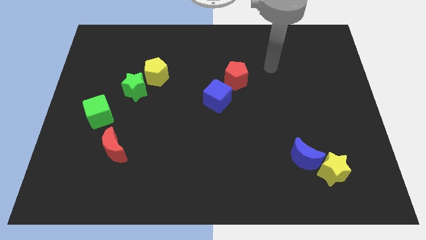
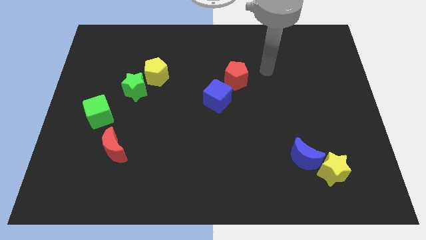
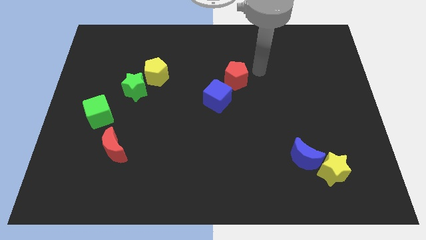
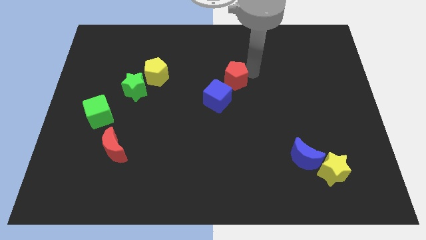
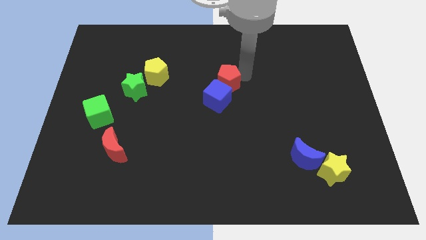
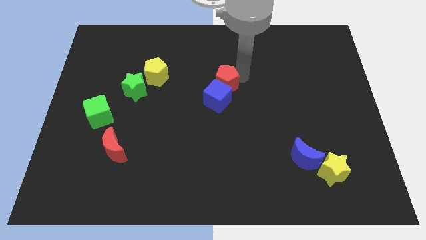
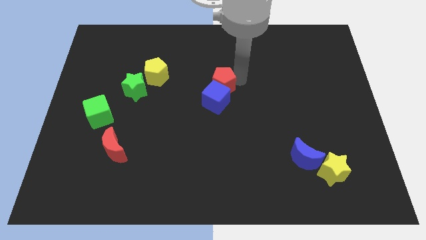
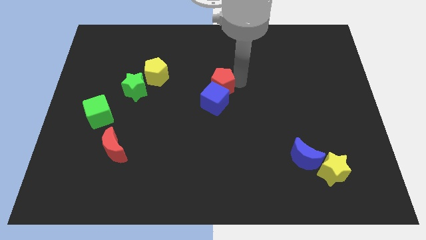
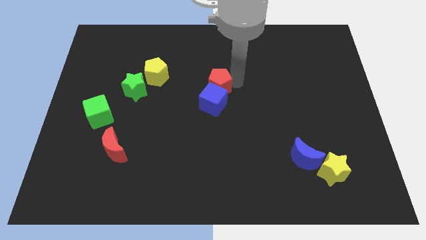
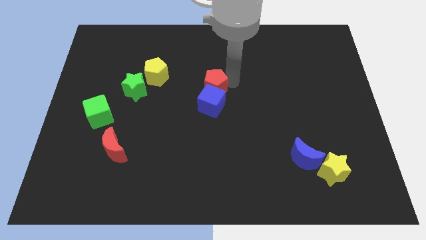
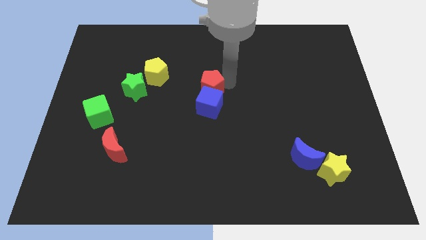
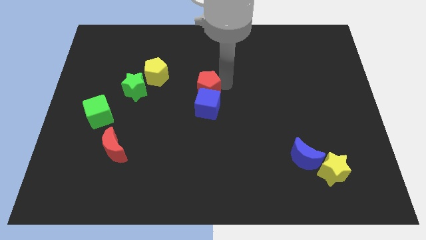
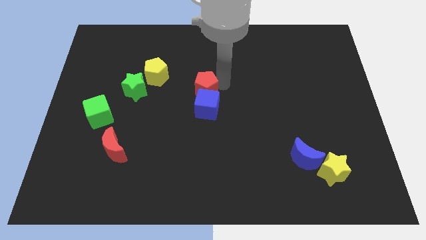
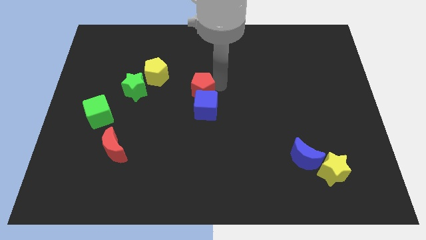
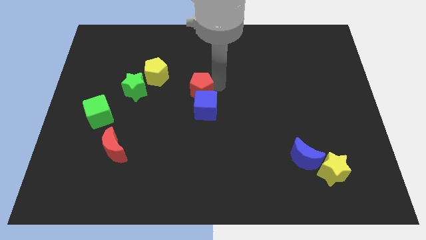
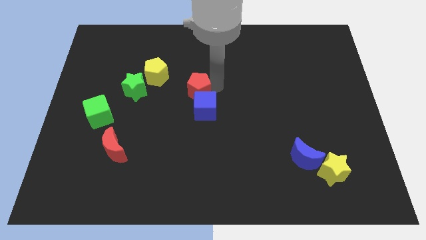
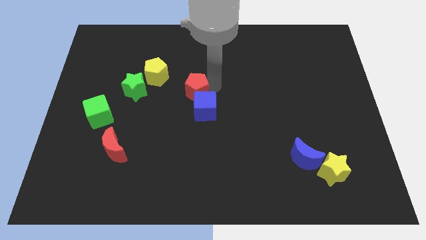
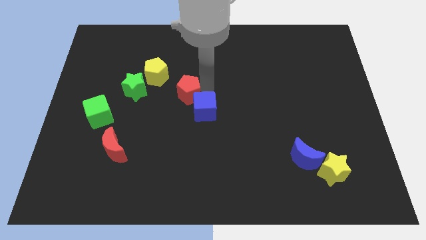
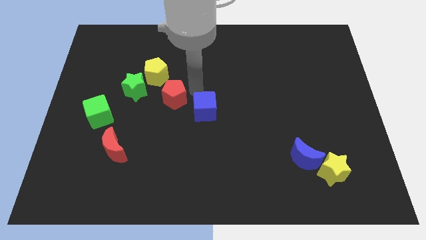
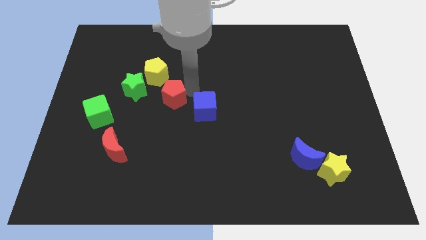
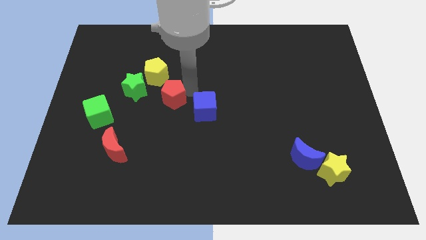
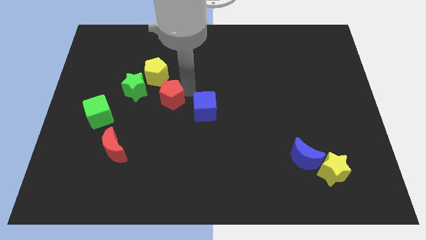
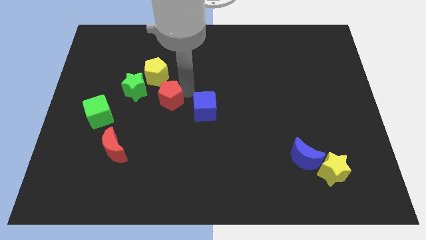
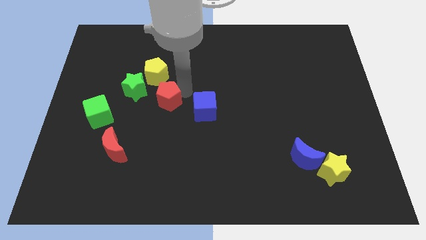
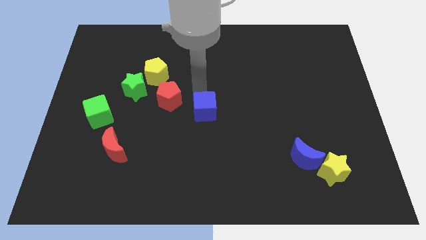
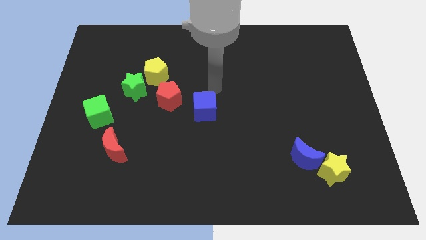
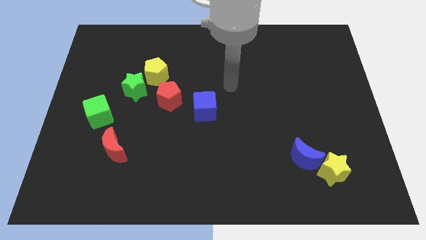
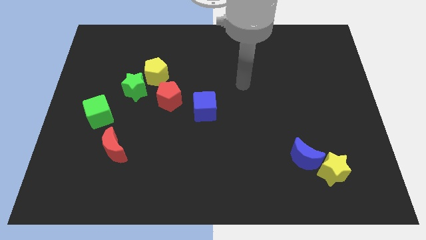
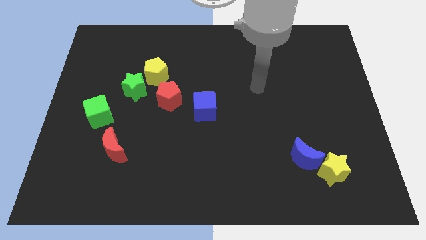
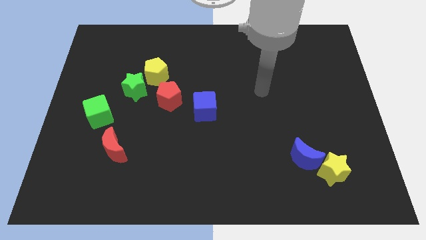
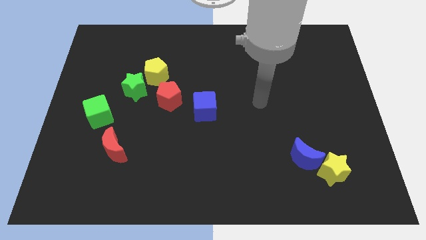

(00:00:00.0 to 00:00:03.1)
move red pentagon towards green star

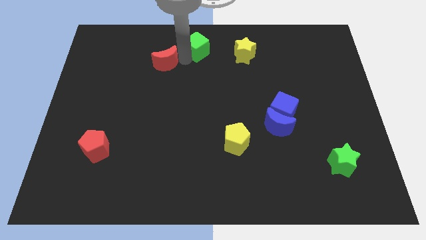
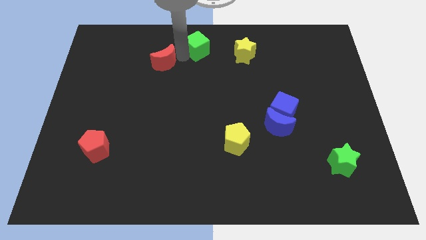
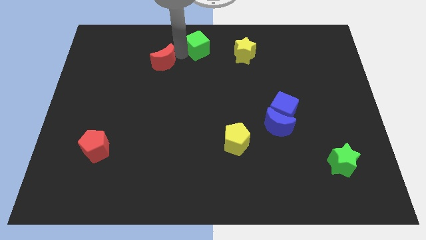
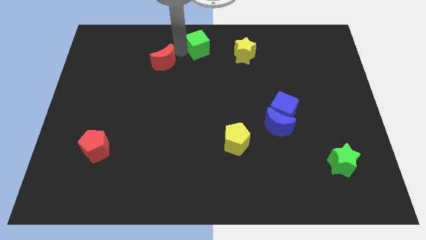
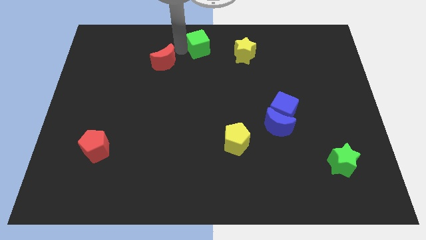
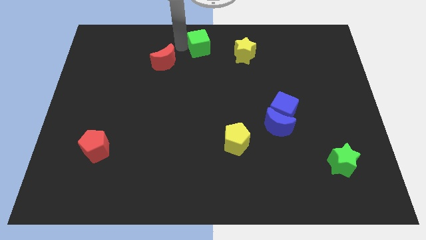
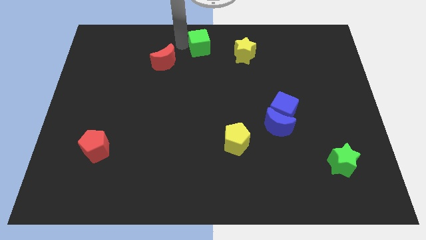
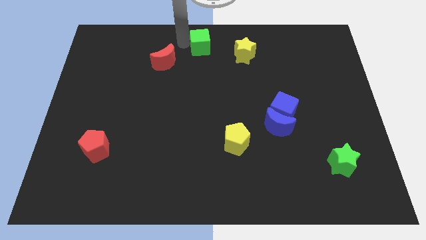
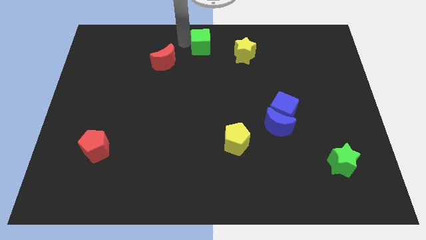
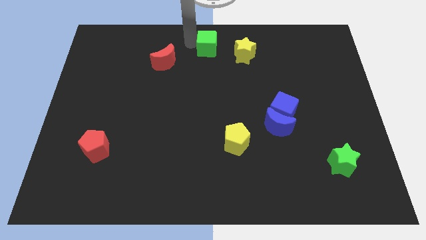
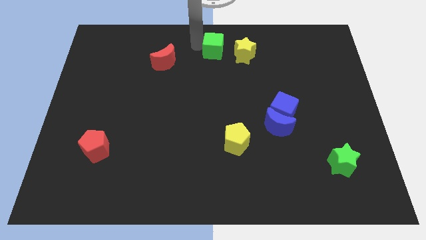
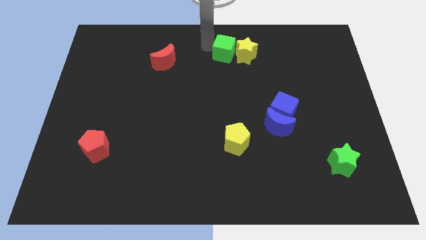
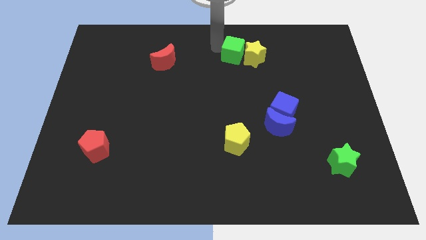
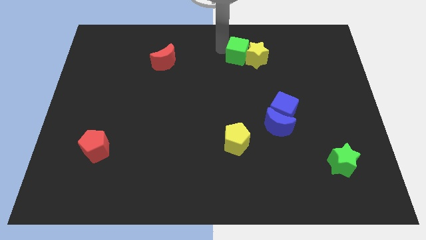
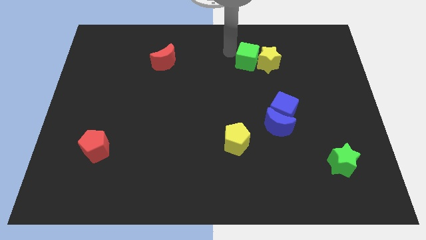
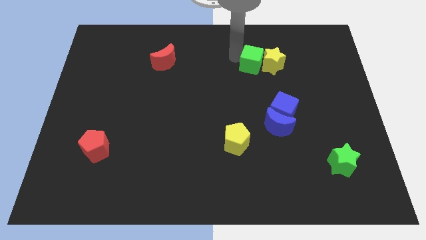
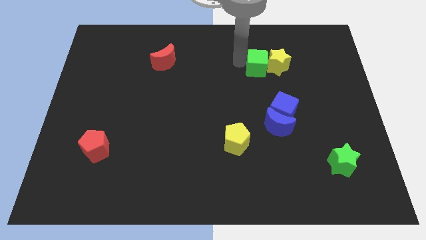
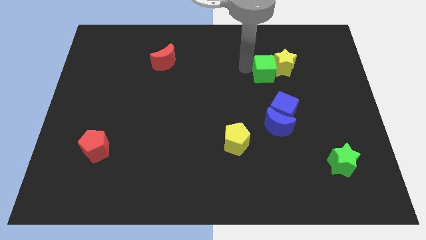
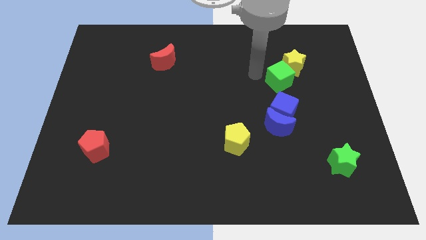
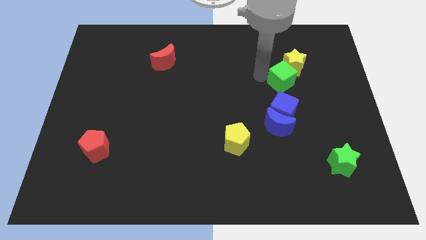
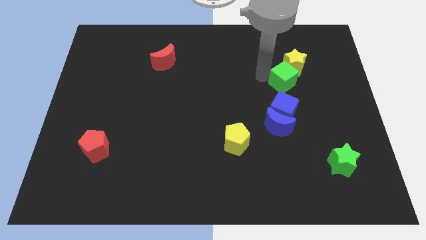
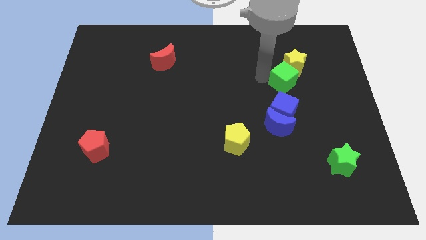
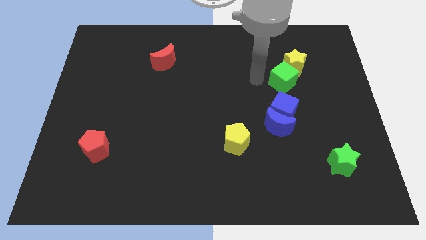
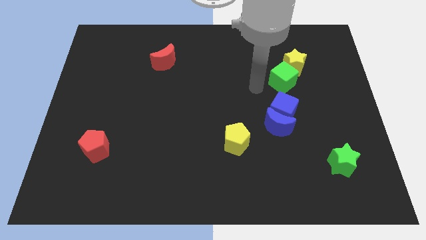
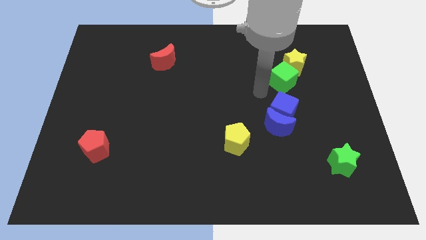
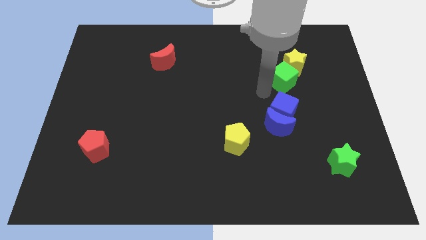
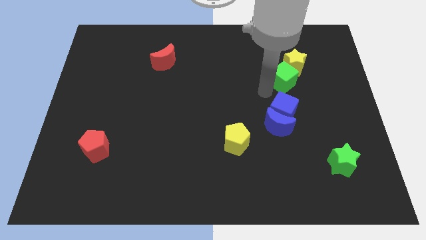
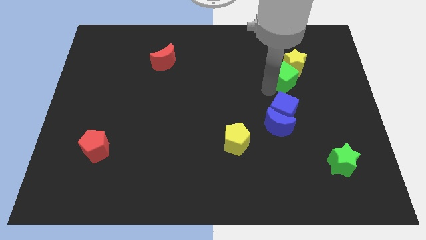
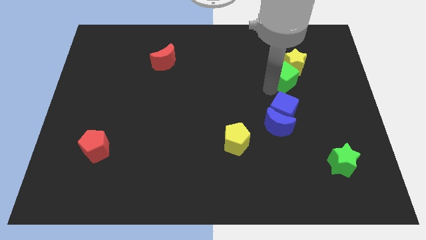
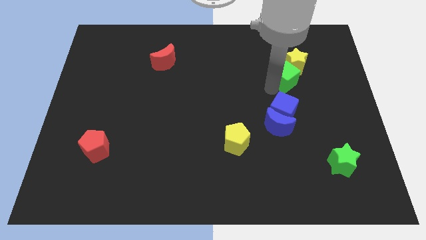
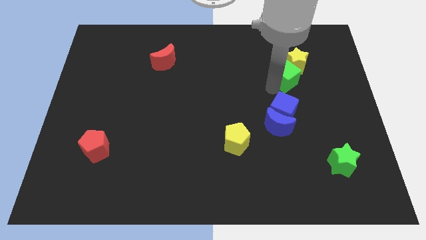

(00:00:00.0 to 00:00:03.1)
push the green cube into the yellow star

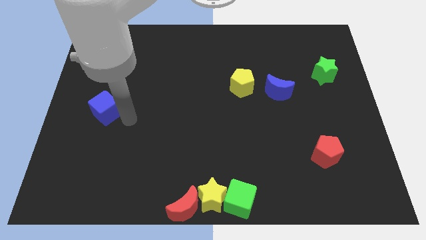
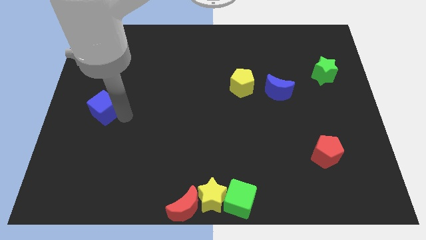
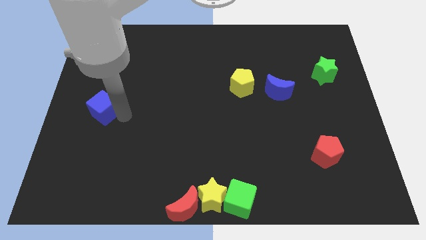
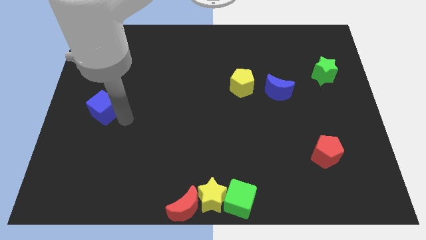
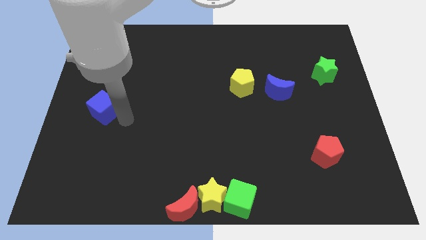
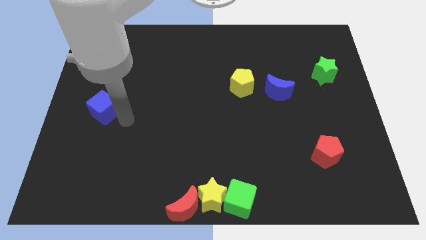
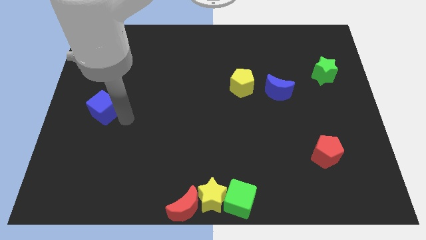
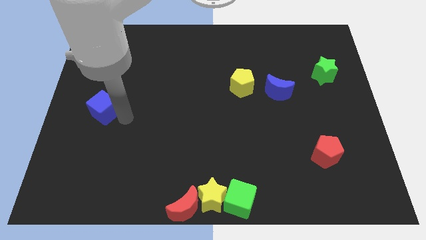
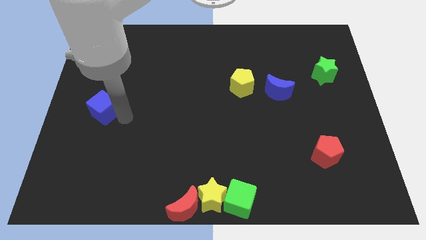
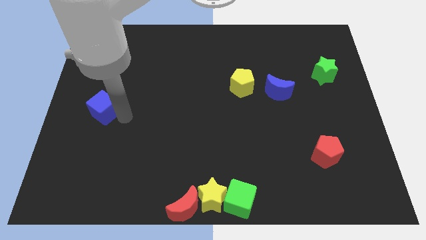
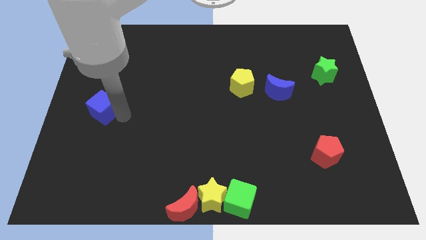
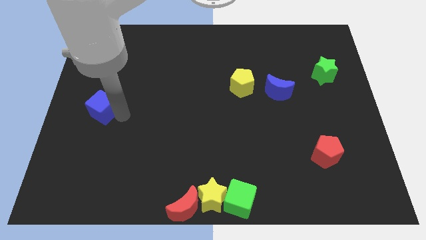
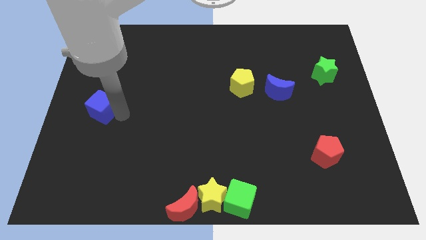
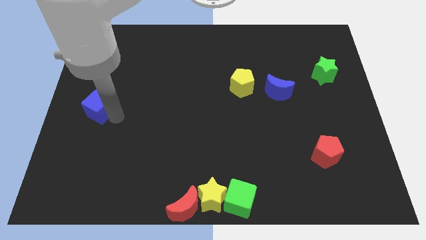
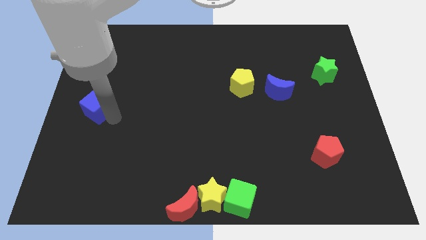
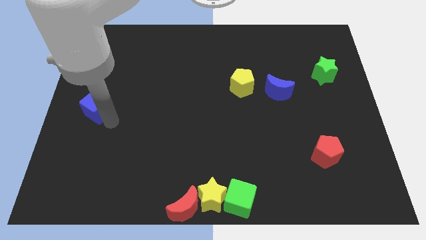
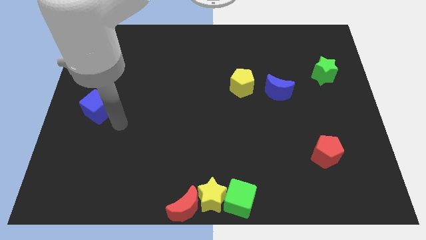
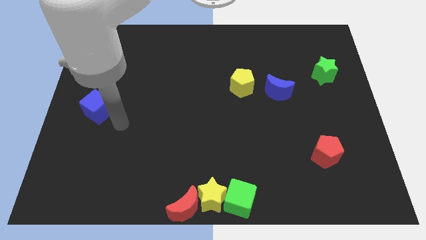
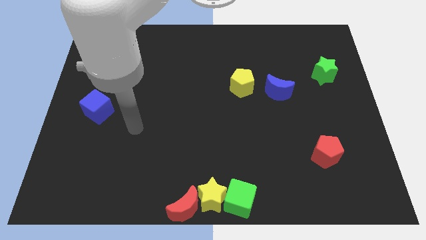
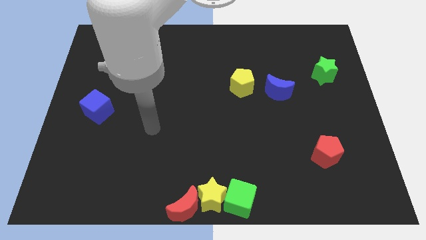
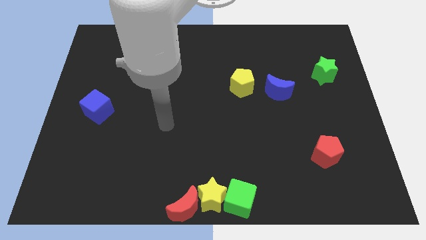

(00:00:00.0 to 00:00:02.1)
move your hand away from the blue cube

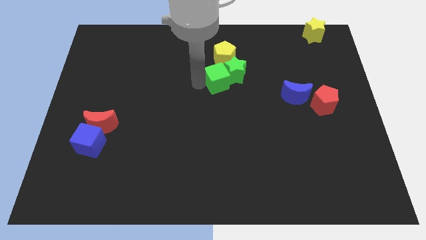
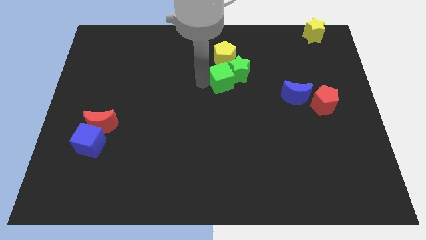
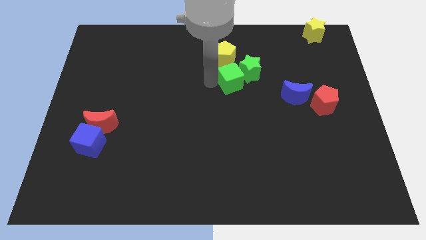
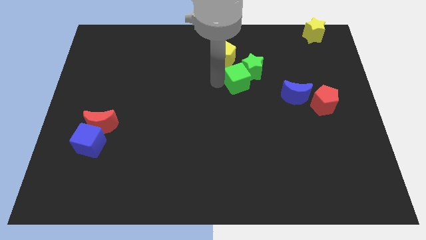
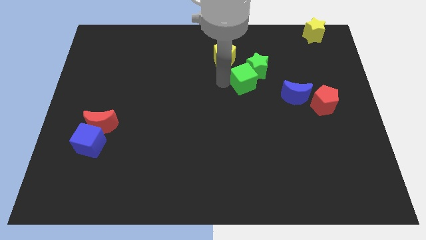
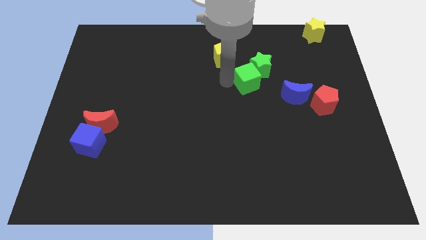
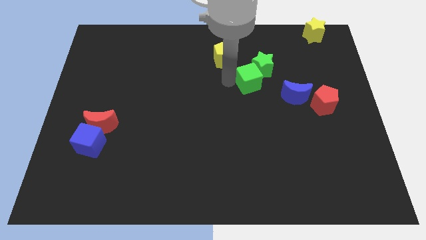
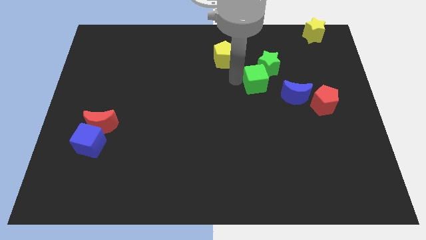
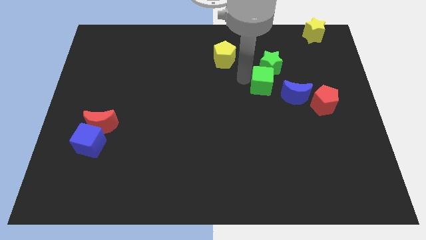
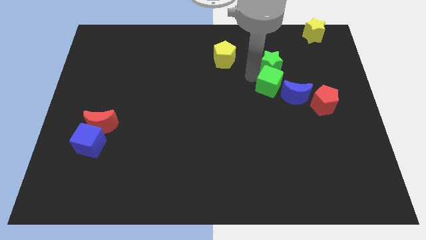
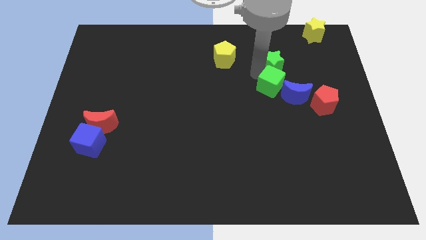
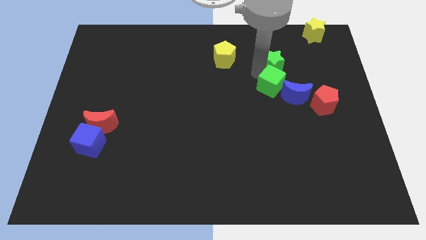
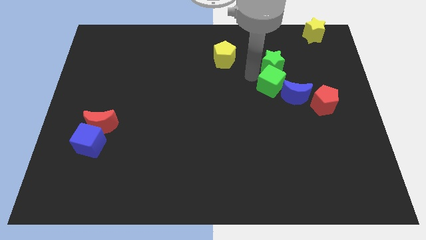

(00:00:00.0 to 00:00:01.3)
move the green blocks to center right
